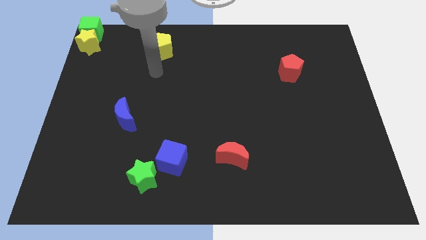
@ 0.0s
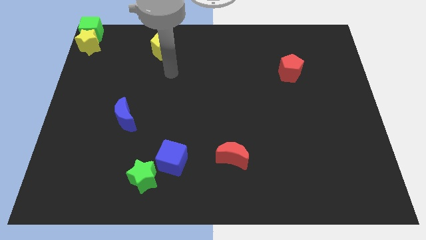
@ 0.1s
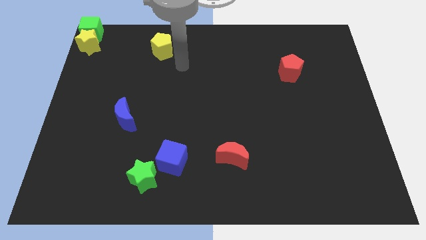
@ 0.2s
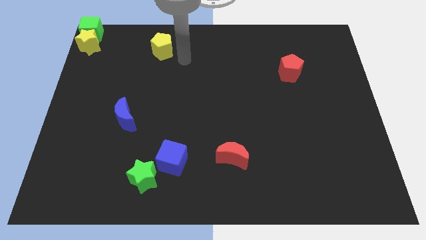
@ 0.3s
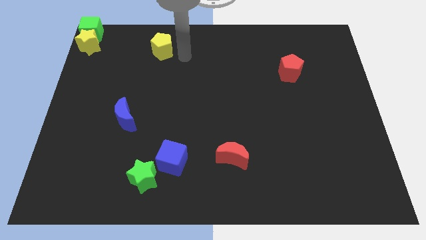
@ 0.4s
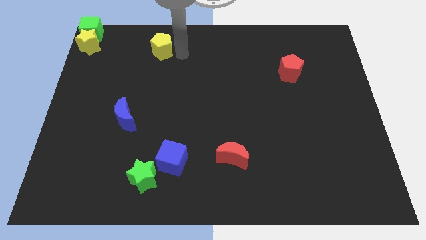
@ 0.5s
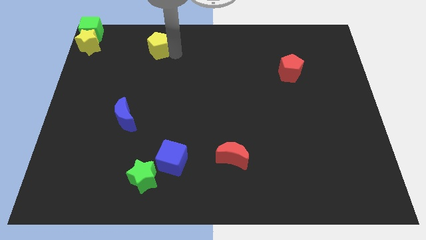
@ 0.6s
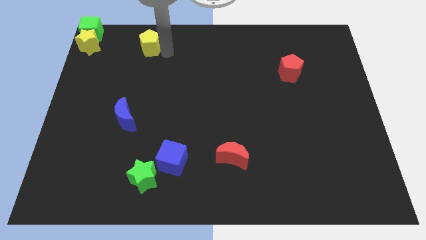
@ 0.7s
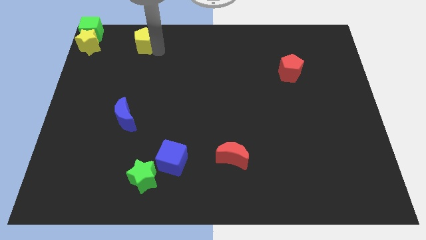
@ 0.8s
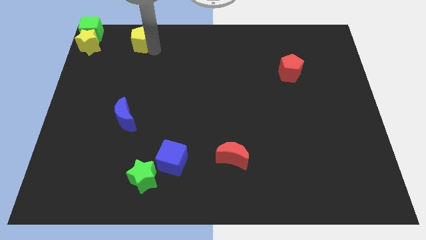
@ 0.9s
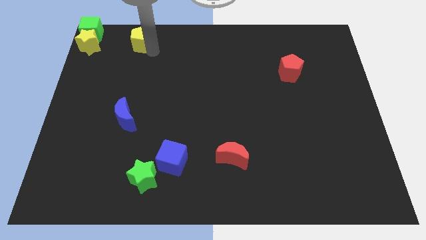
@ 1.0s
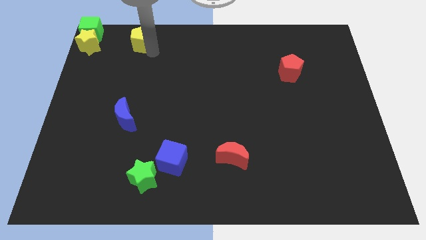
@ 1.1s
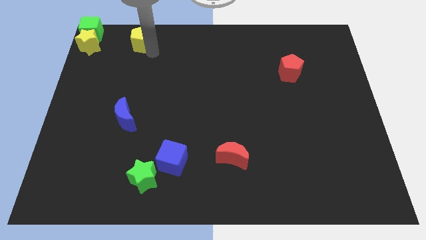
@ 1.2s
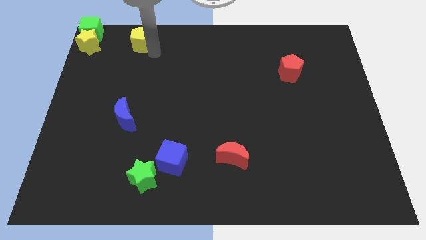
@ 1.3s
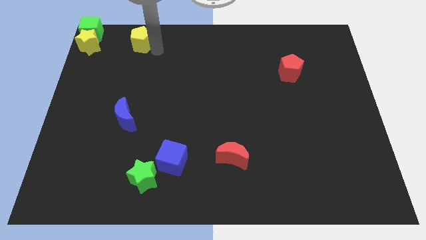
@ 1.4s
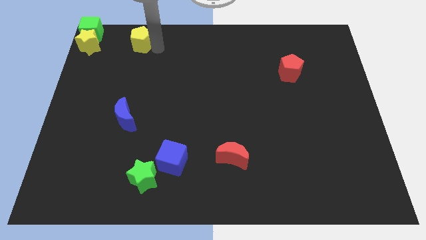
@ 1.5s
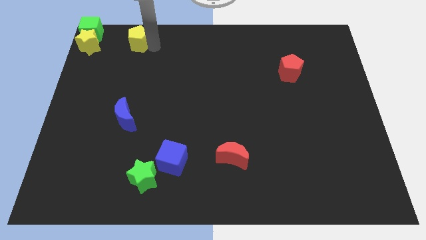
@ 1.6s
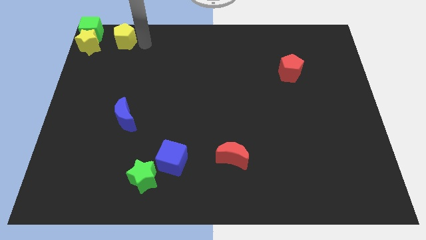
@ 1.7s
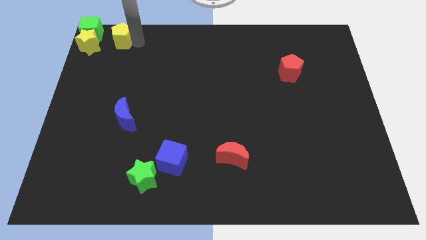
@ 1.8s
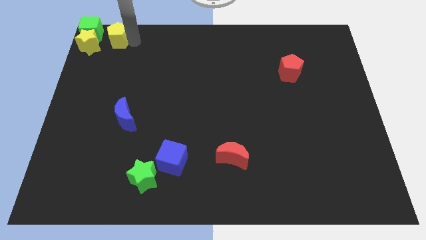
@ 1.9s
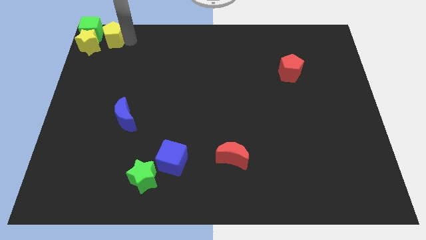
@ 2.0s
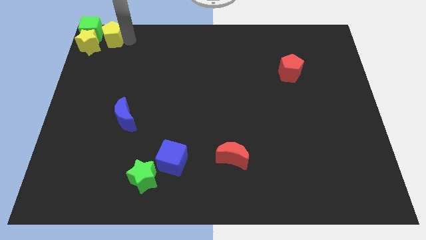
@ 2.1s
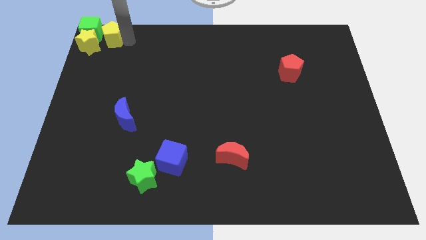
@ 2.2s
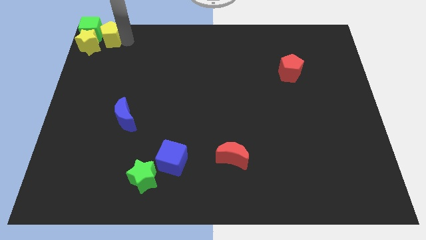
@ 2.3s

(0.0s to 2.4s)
move the yellow pentagon close to the green cube

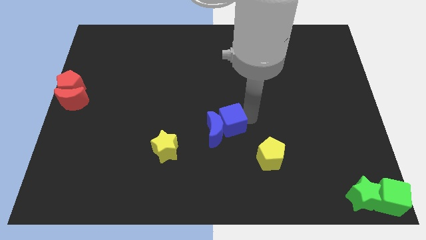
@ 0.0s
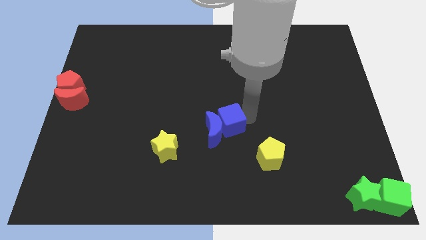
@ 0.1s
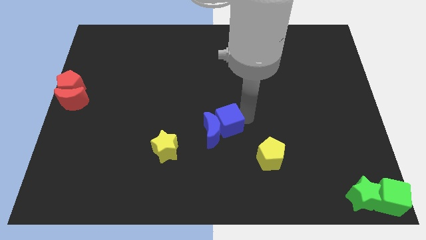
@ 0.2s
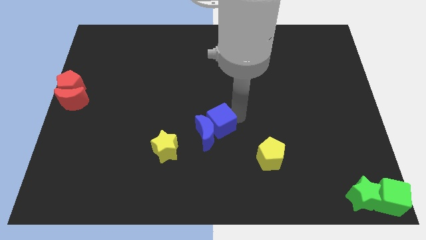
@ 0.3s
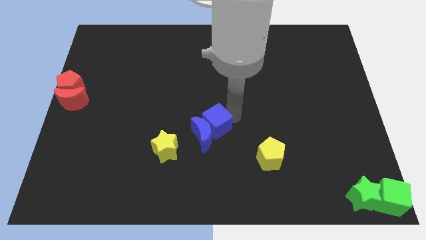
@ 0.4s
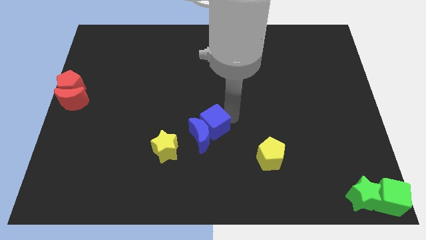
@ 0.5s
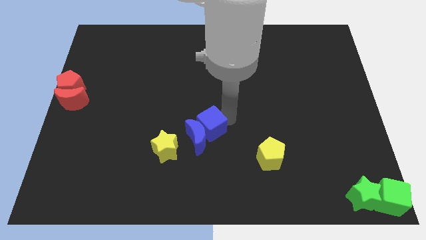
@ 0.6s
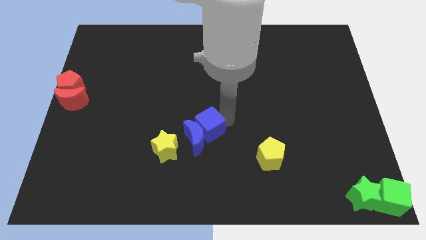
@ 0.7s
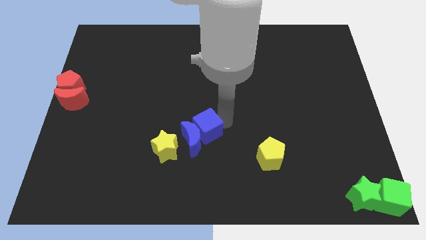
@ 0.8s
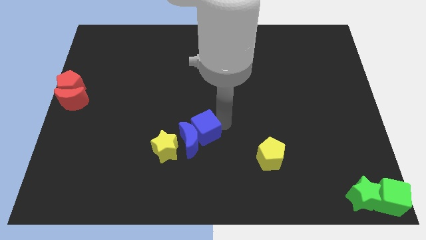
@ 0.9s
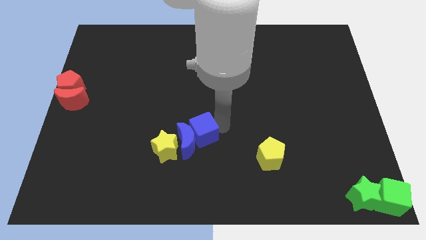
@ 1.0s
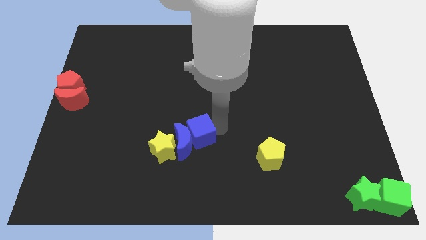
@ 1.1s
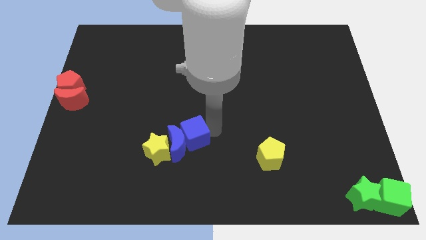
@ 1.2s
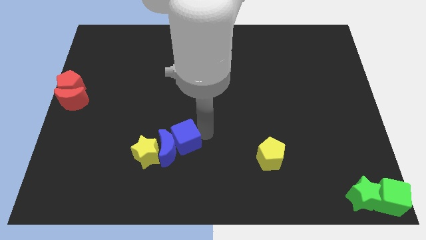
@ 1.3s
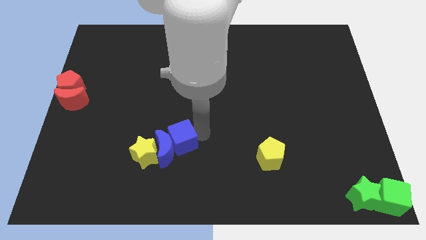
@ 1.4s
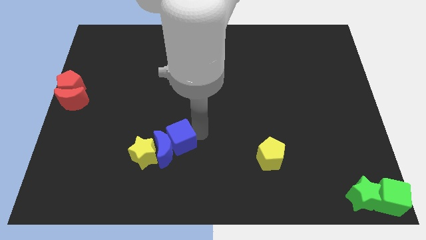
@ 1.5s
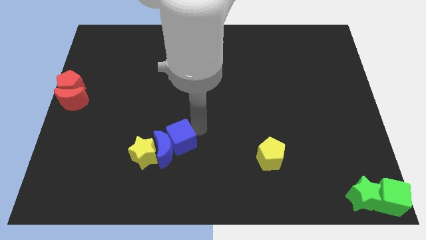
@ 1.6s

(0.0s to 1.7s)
push the blue crescent along with blue cube towards the yellow star

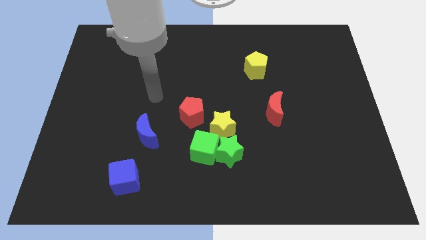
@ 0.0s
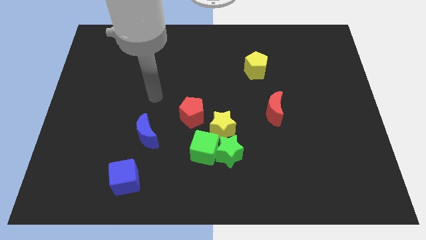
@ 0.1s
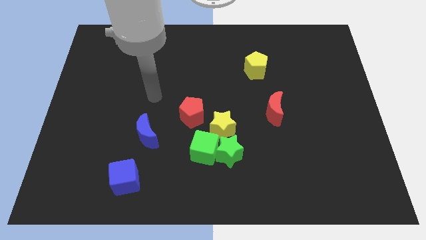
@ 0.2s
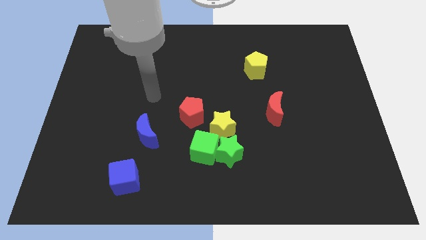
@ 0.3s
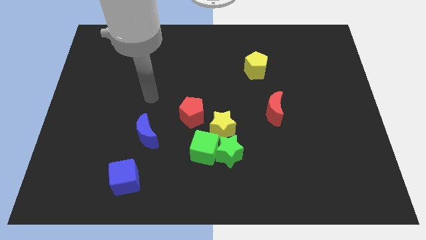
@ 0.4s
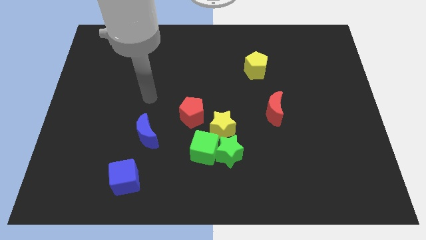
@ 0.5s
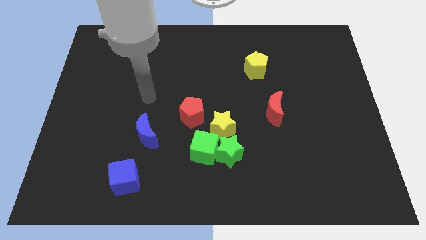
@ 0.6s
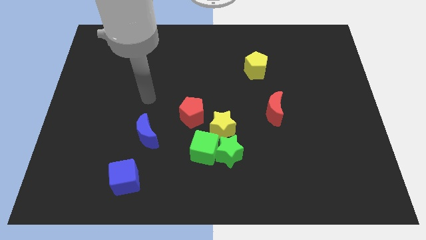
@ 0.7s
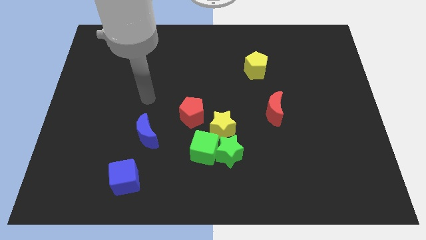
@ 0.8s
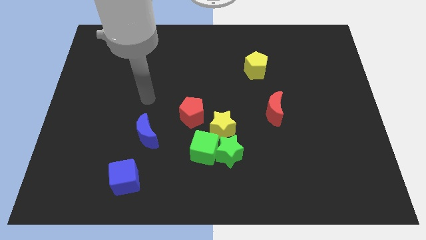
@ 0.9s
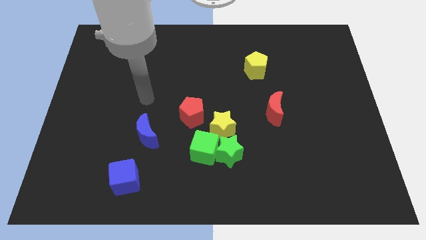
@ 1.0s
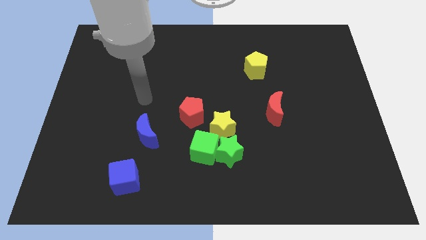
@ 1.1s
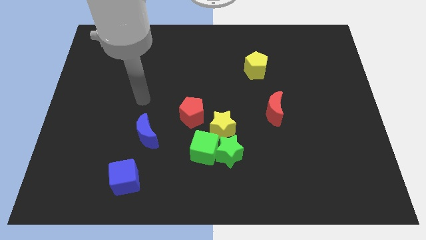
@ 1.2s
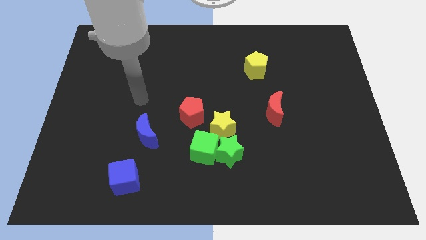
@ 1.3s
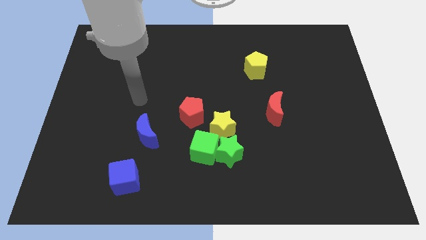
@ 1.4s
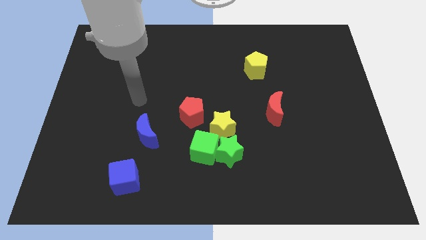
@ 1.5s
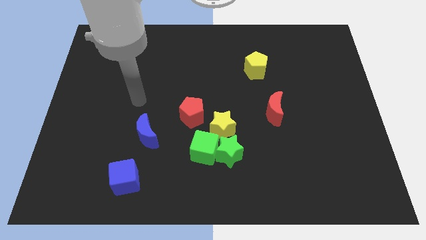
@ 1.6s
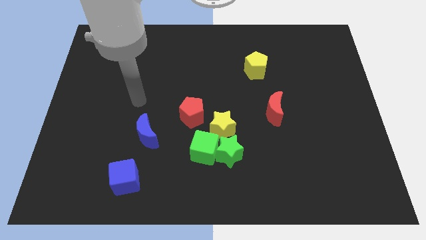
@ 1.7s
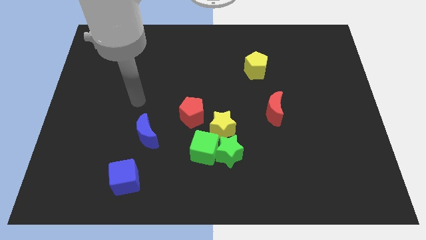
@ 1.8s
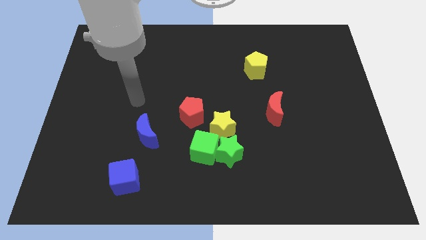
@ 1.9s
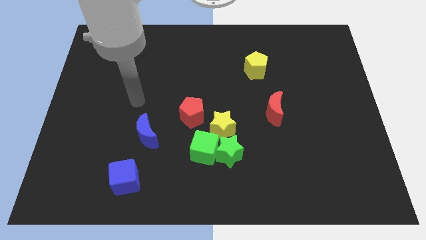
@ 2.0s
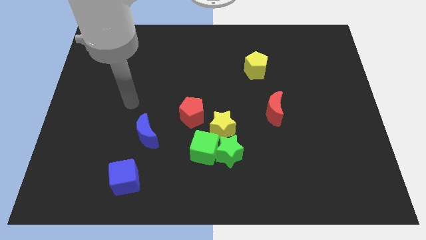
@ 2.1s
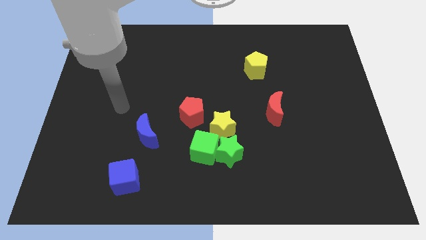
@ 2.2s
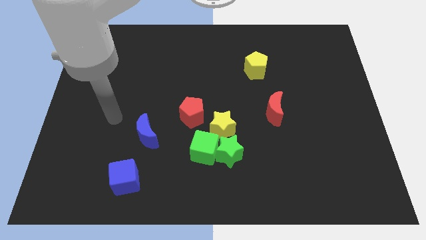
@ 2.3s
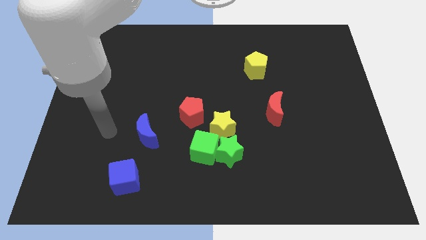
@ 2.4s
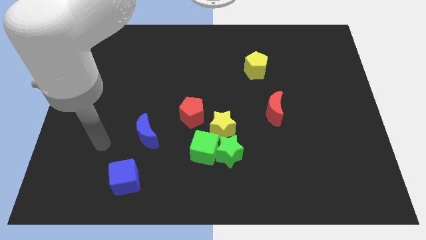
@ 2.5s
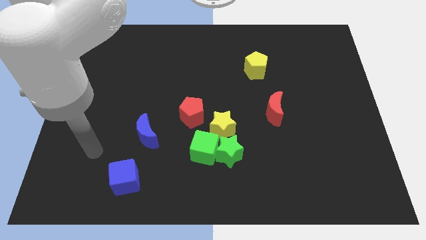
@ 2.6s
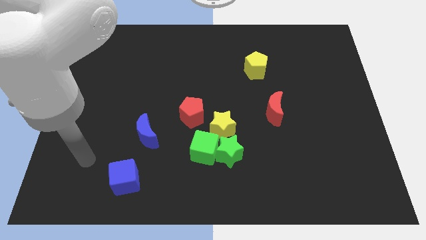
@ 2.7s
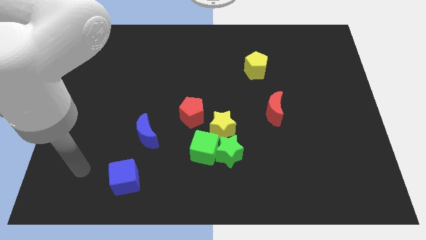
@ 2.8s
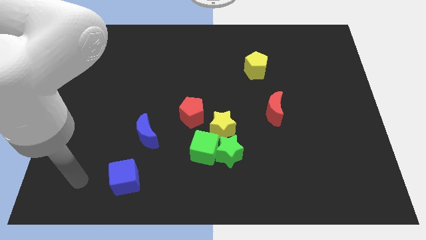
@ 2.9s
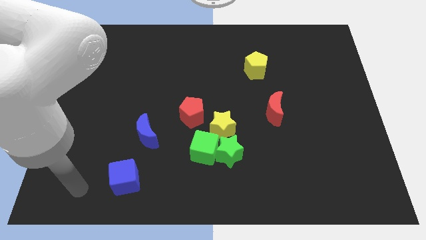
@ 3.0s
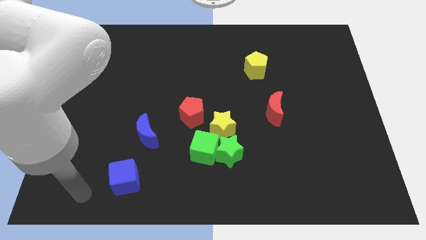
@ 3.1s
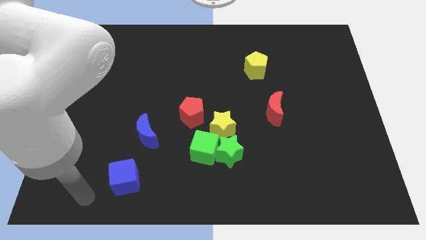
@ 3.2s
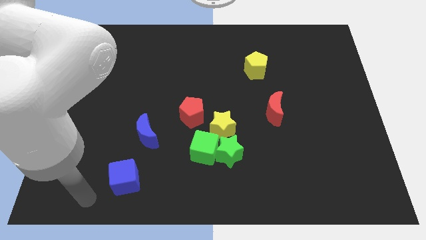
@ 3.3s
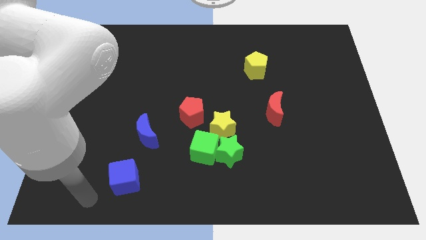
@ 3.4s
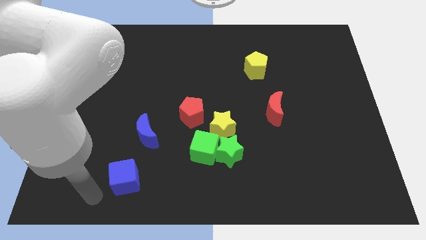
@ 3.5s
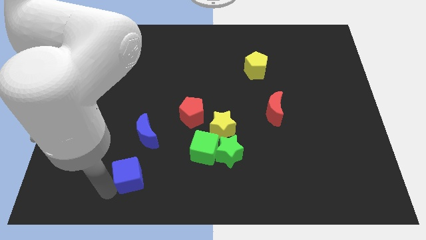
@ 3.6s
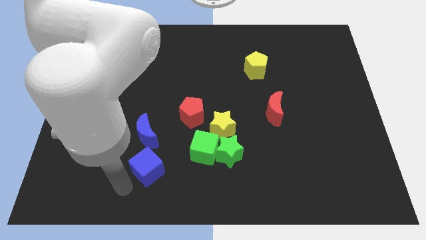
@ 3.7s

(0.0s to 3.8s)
touch the bottom of the blue cube

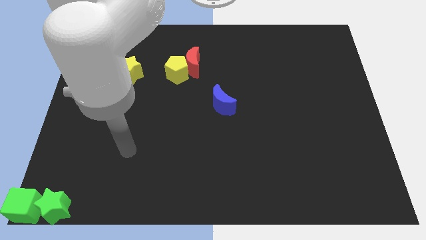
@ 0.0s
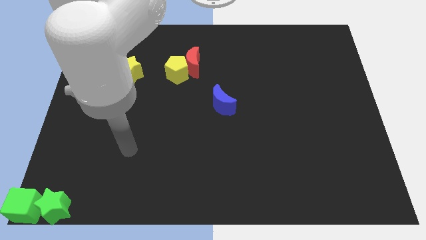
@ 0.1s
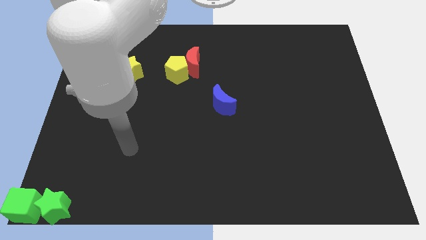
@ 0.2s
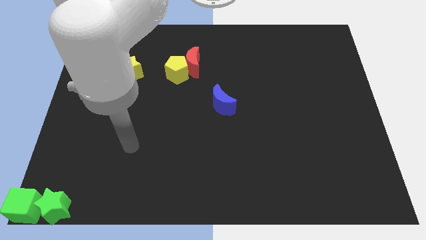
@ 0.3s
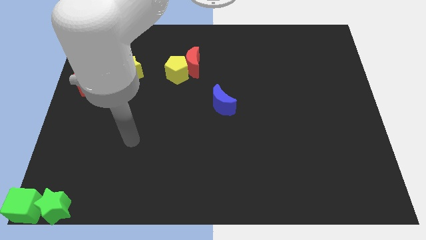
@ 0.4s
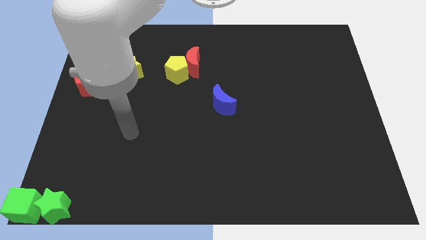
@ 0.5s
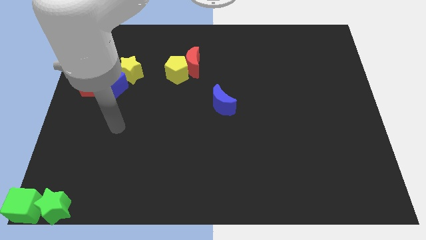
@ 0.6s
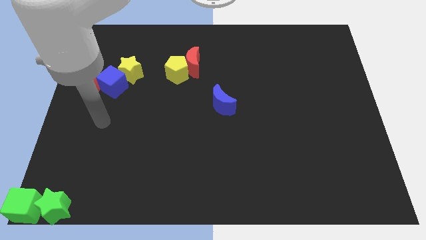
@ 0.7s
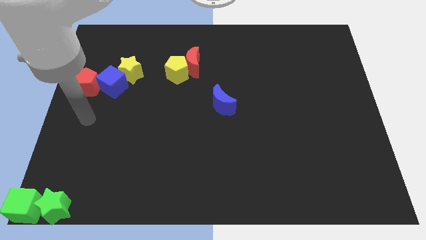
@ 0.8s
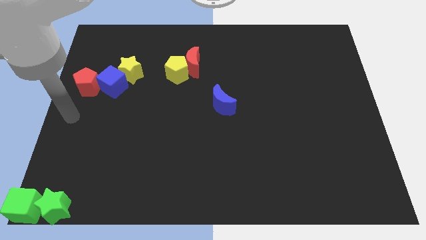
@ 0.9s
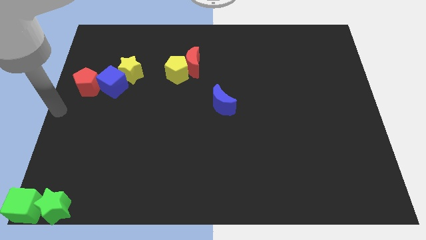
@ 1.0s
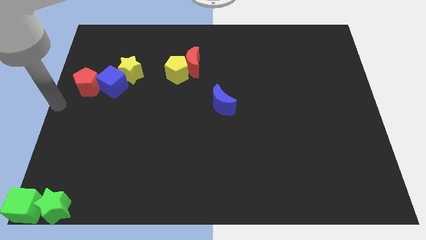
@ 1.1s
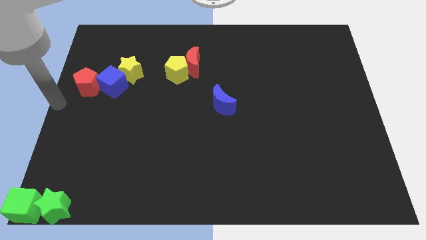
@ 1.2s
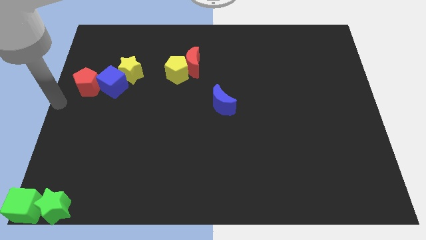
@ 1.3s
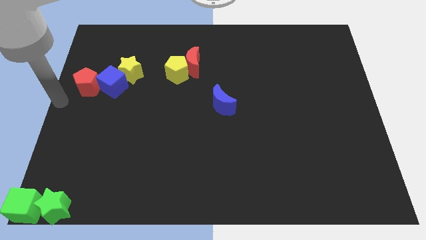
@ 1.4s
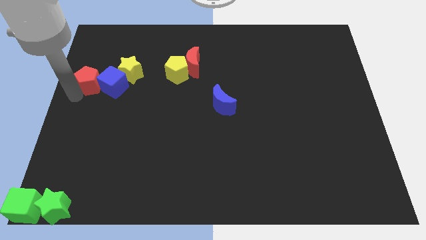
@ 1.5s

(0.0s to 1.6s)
move the hand at the bottom left of the red pentagon
